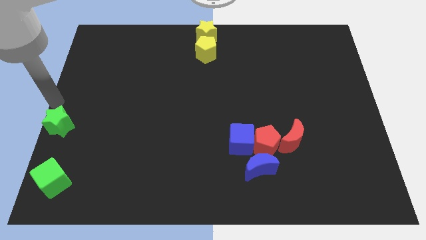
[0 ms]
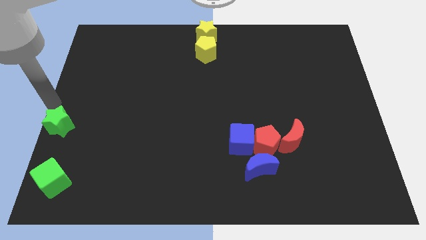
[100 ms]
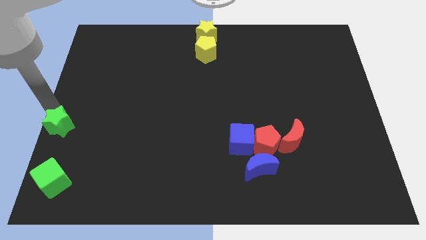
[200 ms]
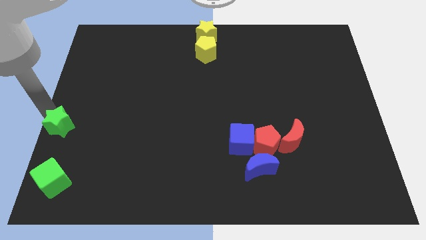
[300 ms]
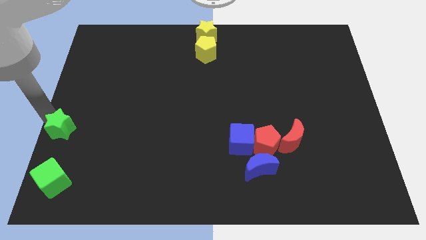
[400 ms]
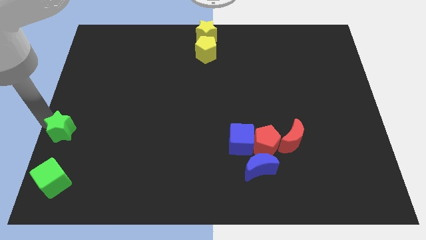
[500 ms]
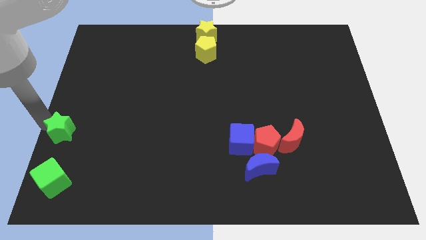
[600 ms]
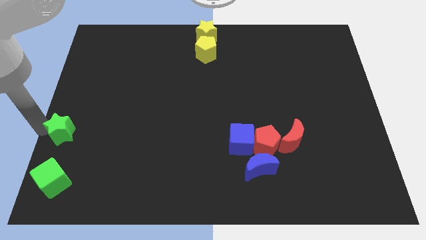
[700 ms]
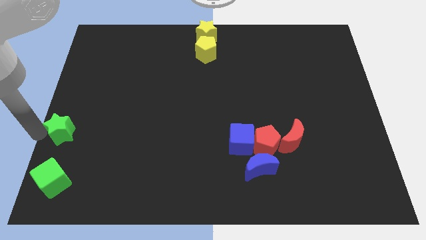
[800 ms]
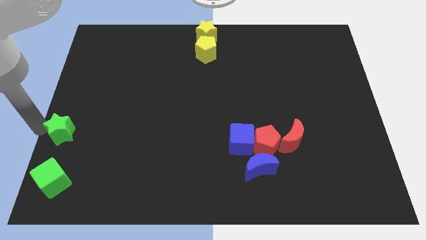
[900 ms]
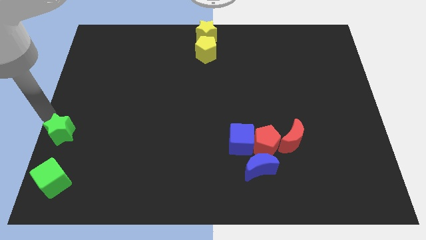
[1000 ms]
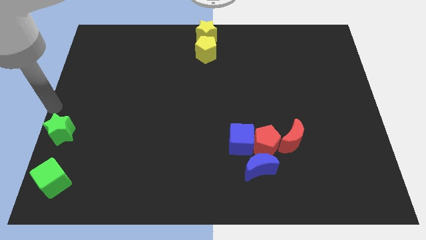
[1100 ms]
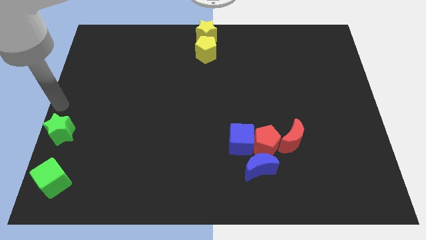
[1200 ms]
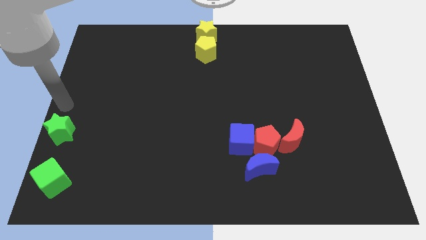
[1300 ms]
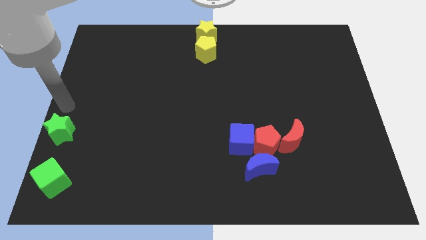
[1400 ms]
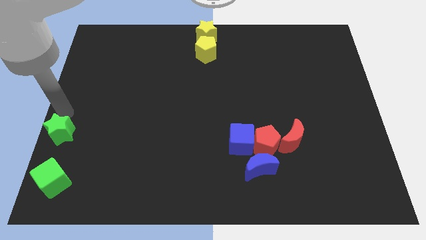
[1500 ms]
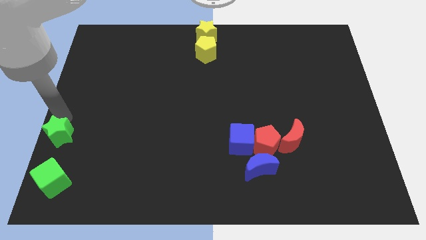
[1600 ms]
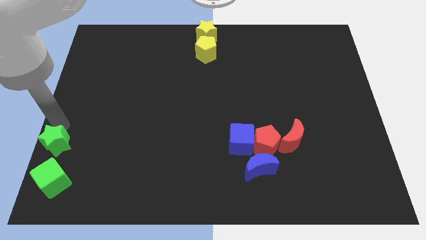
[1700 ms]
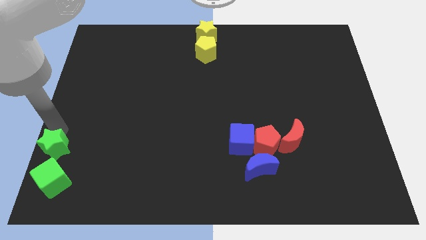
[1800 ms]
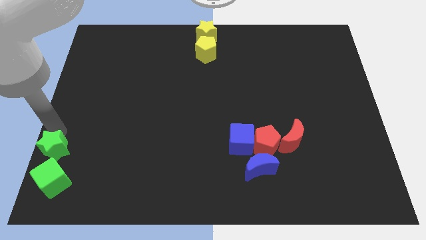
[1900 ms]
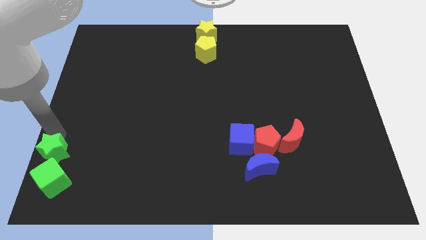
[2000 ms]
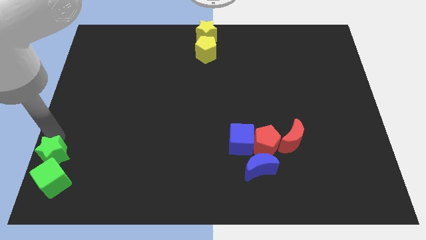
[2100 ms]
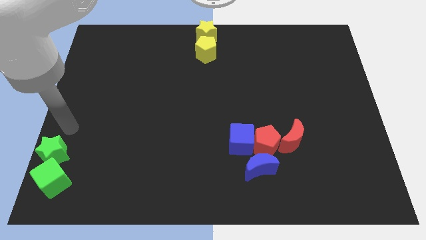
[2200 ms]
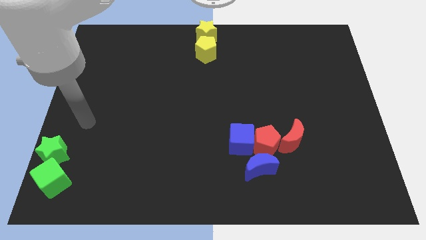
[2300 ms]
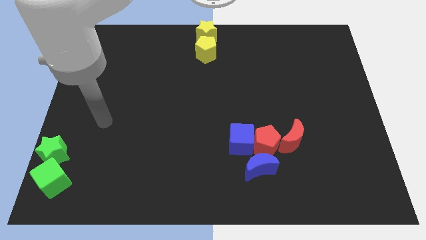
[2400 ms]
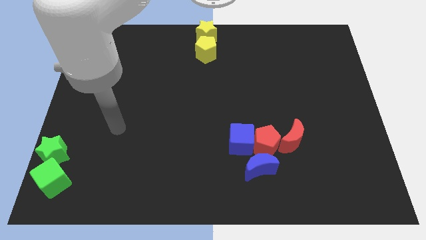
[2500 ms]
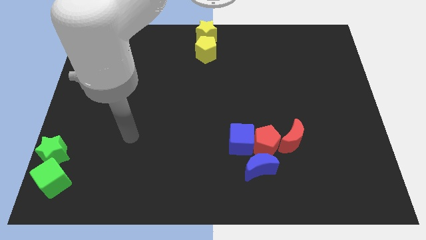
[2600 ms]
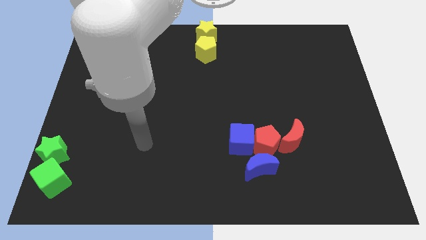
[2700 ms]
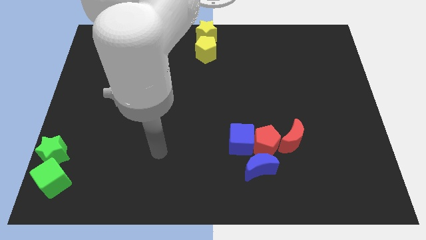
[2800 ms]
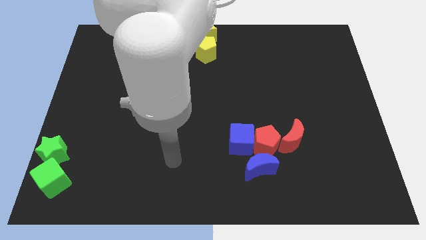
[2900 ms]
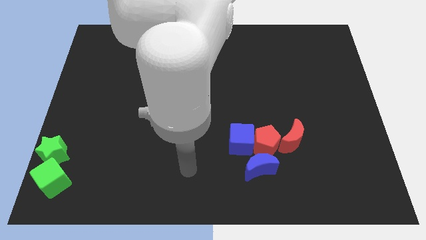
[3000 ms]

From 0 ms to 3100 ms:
push the green star to the top of green cube

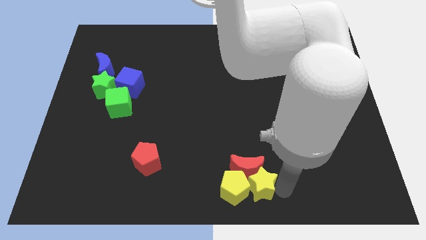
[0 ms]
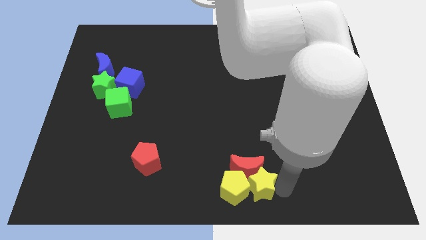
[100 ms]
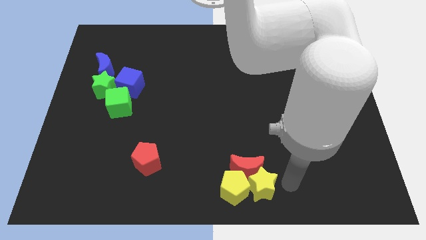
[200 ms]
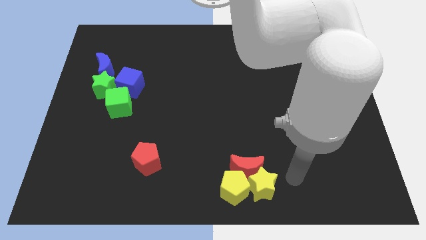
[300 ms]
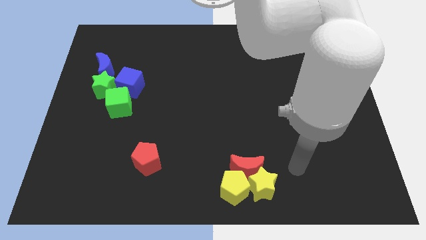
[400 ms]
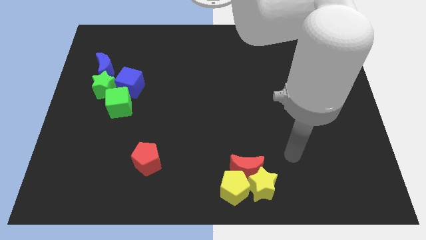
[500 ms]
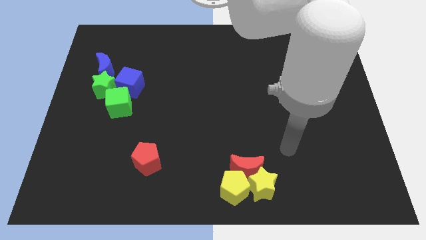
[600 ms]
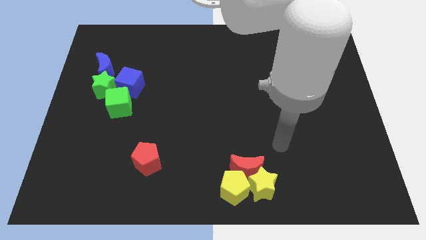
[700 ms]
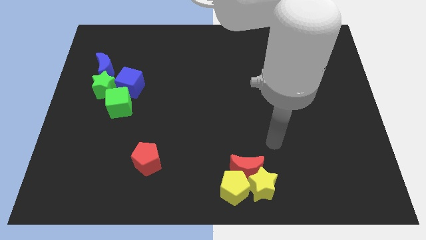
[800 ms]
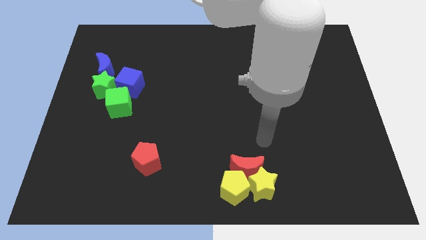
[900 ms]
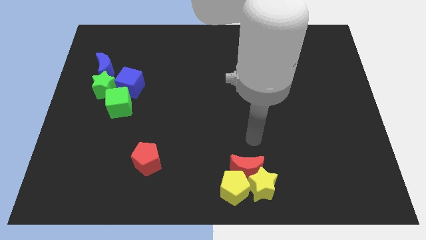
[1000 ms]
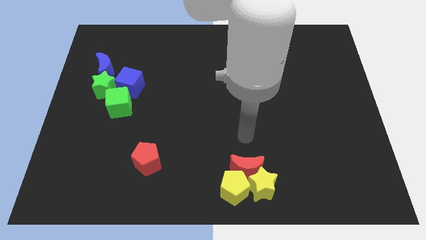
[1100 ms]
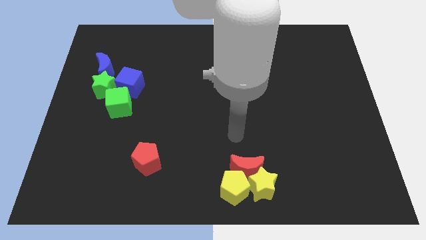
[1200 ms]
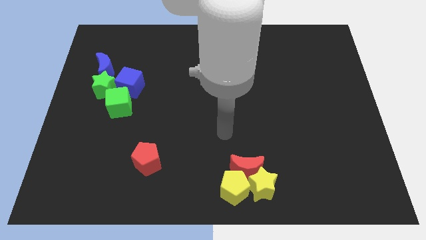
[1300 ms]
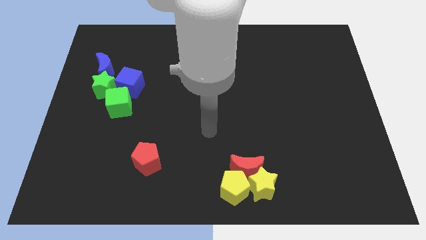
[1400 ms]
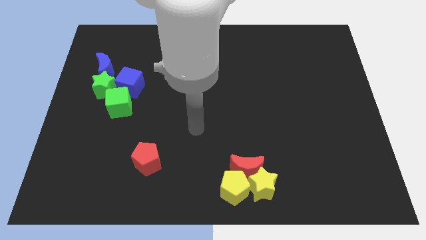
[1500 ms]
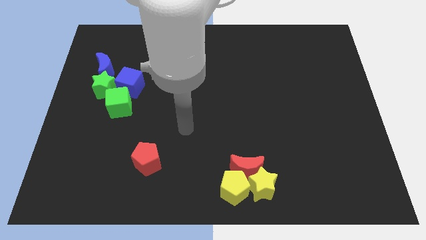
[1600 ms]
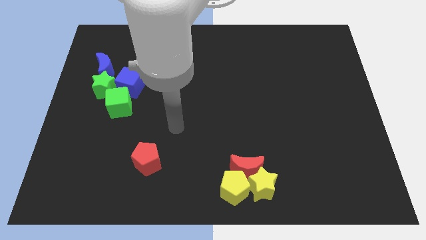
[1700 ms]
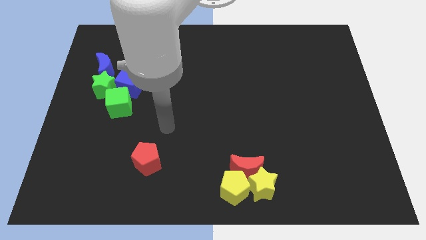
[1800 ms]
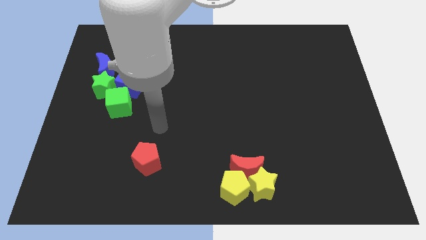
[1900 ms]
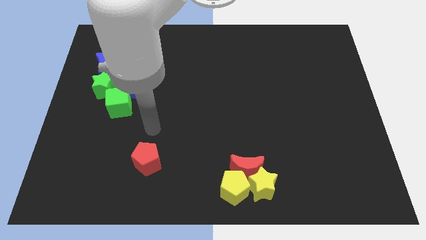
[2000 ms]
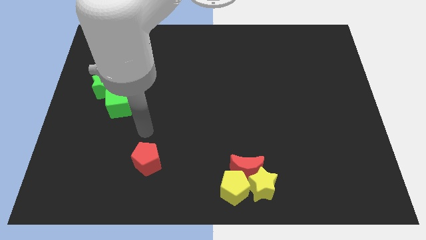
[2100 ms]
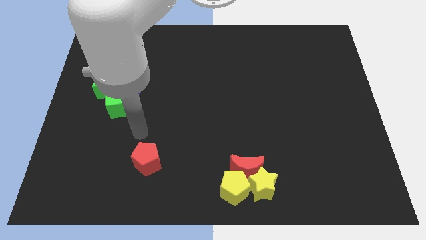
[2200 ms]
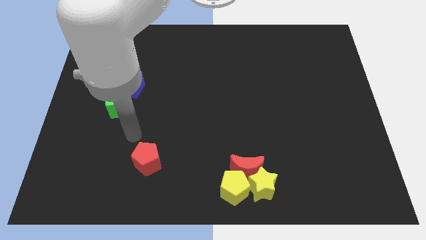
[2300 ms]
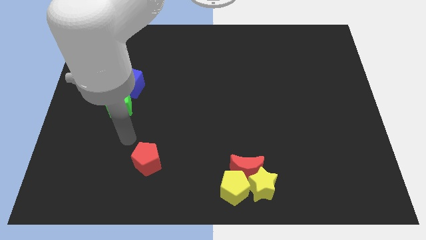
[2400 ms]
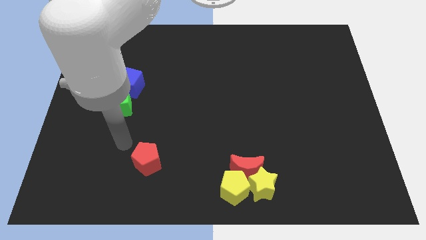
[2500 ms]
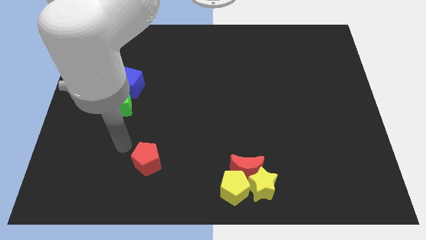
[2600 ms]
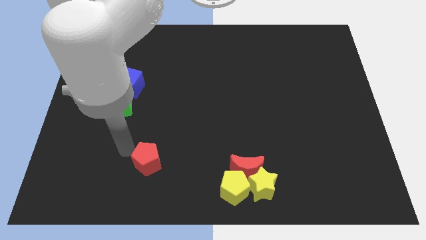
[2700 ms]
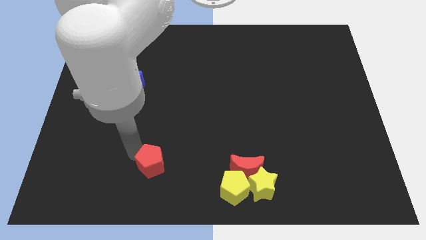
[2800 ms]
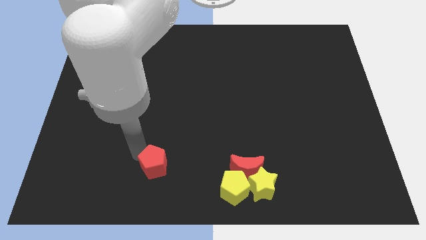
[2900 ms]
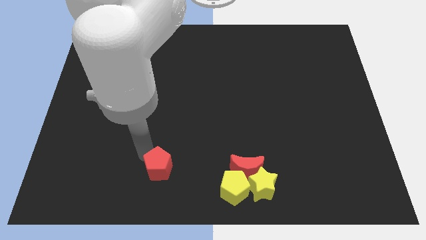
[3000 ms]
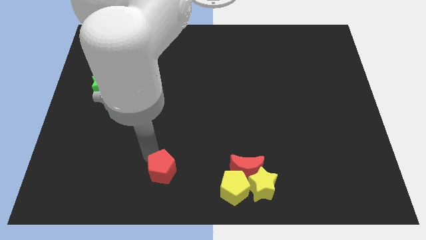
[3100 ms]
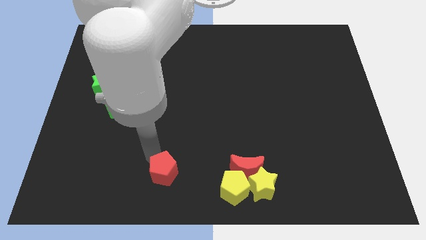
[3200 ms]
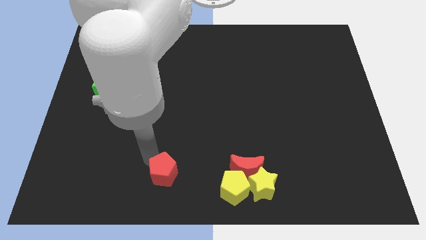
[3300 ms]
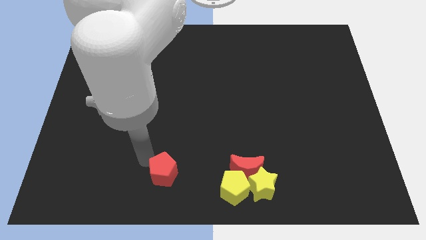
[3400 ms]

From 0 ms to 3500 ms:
move the red pentagon slightly to the bottom

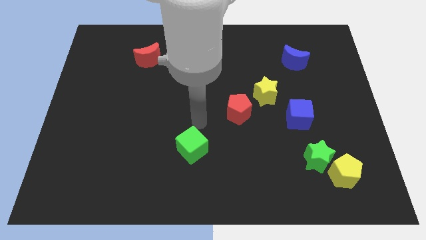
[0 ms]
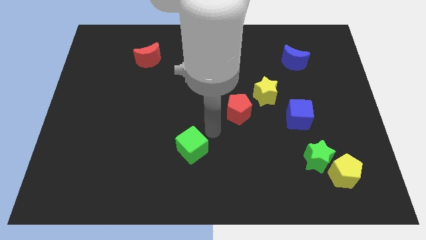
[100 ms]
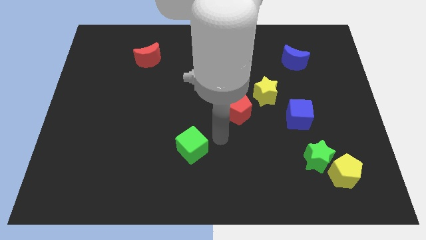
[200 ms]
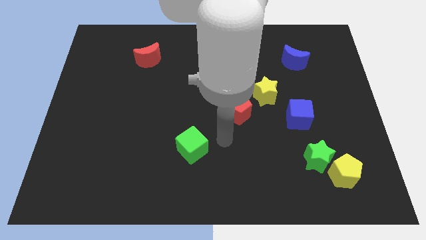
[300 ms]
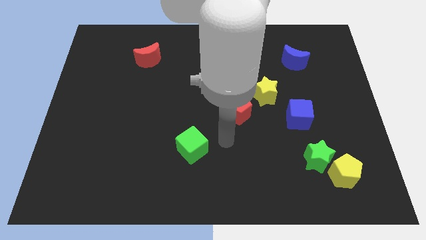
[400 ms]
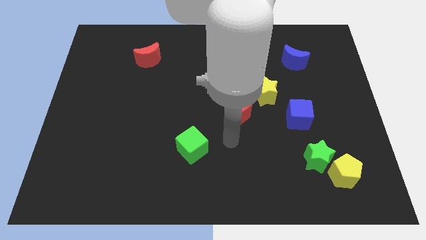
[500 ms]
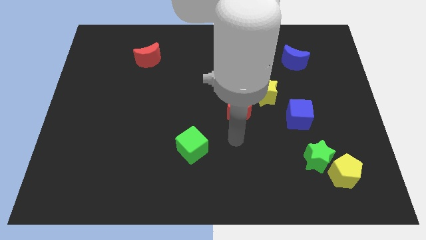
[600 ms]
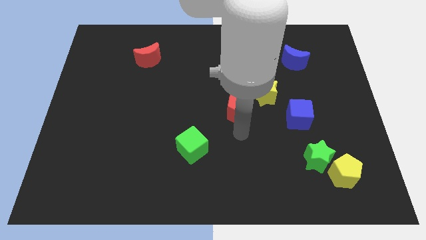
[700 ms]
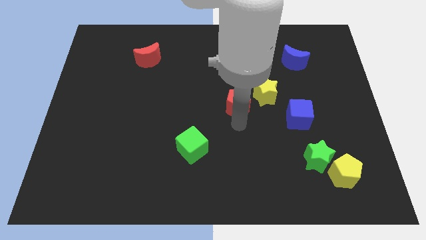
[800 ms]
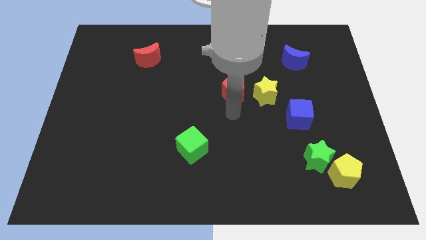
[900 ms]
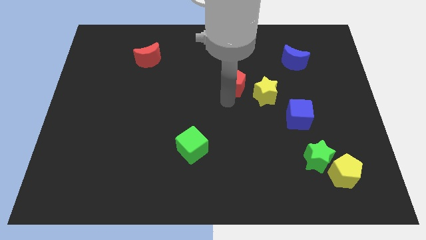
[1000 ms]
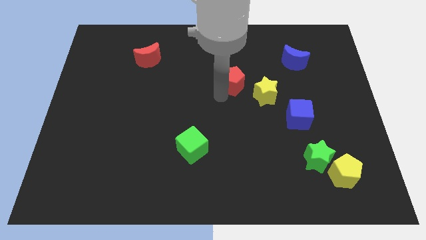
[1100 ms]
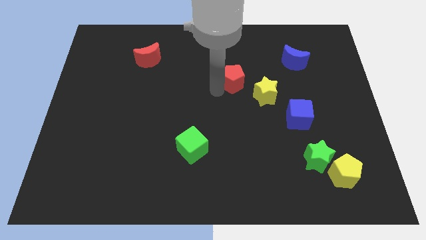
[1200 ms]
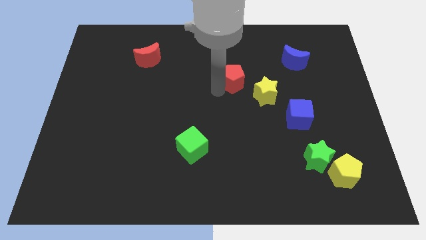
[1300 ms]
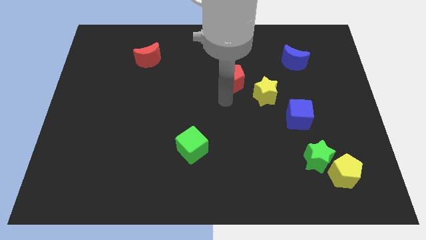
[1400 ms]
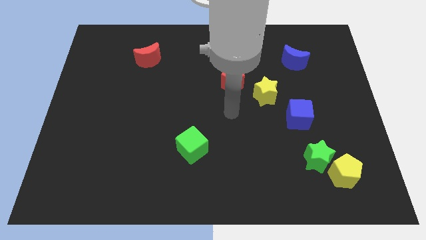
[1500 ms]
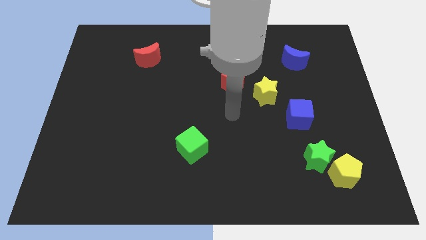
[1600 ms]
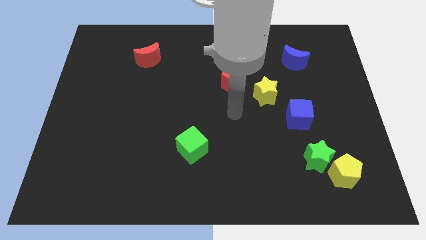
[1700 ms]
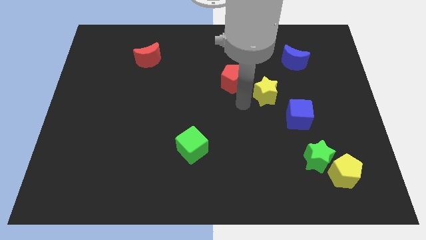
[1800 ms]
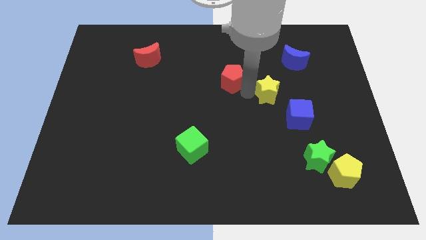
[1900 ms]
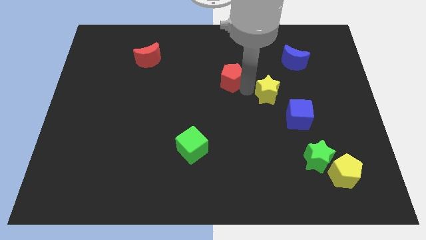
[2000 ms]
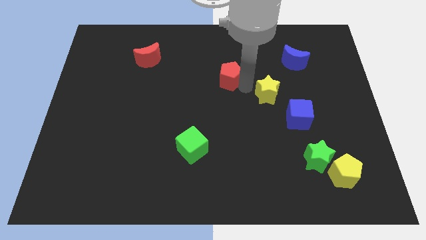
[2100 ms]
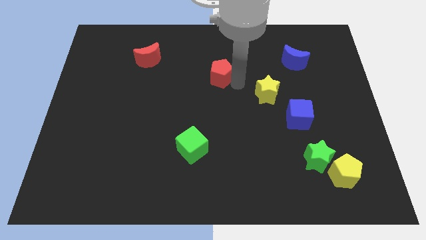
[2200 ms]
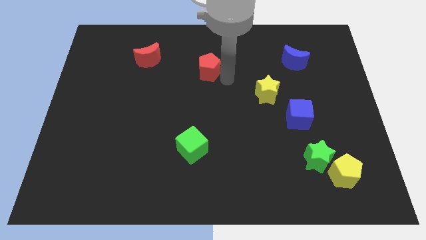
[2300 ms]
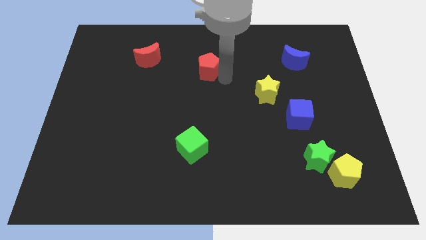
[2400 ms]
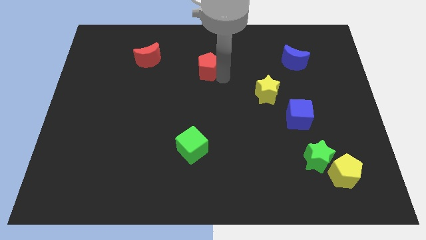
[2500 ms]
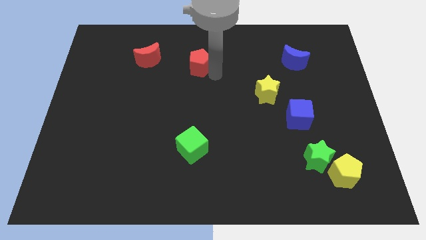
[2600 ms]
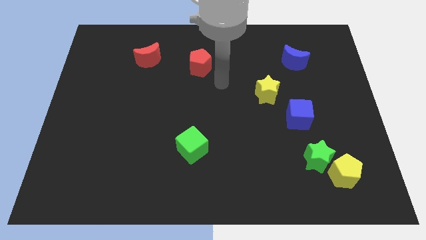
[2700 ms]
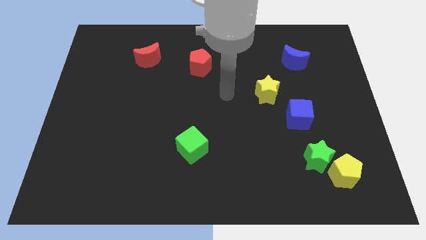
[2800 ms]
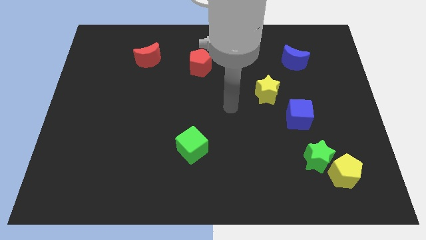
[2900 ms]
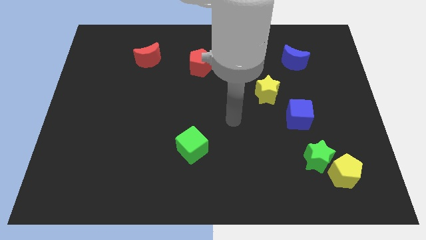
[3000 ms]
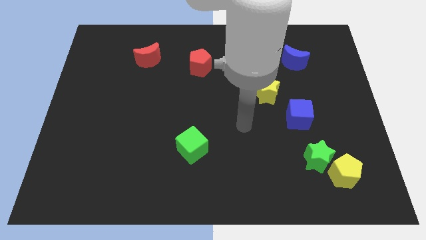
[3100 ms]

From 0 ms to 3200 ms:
push the red pentagon to the right of the red moon
